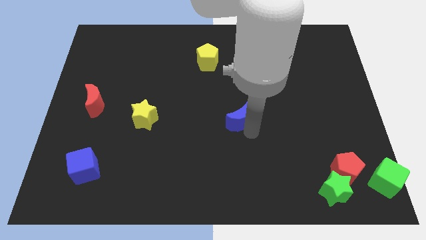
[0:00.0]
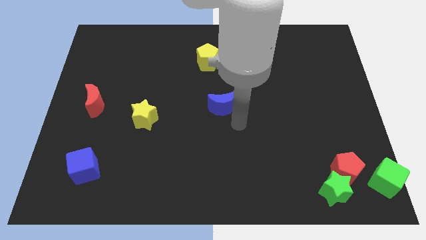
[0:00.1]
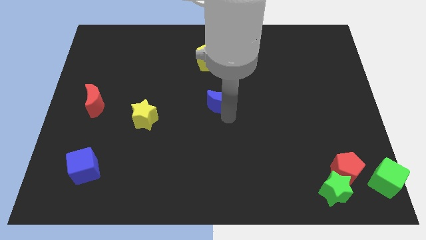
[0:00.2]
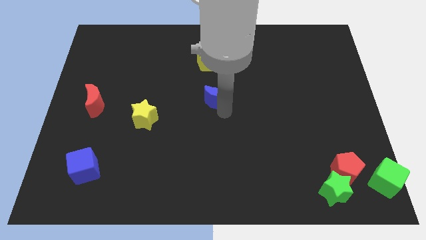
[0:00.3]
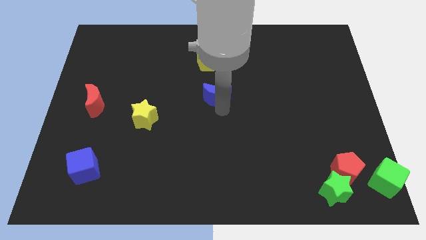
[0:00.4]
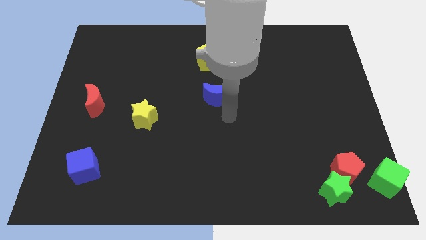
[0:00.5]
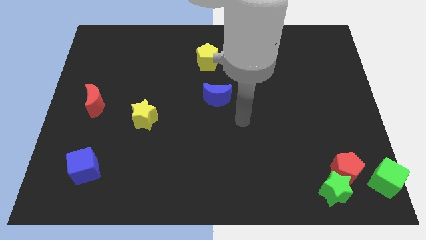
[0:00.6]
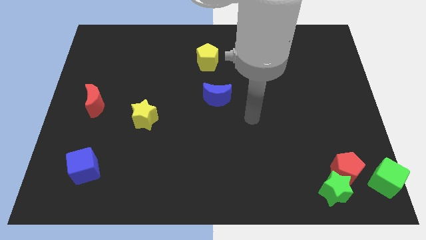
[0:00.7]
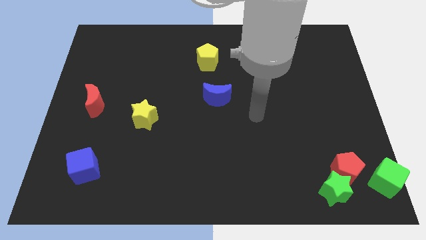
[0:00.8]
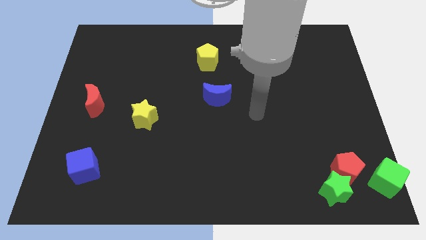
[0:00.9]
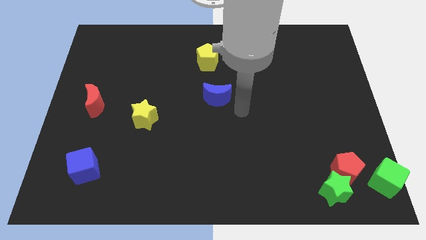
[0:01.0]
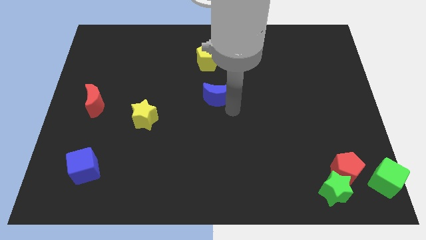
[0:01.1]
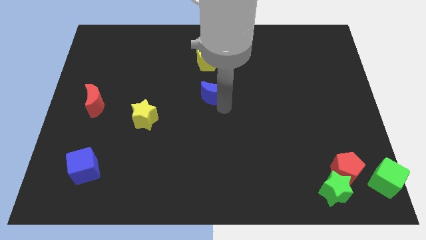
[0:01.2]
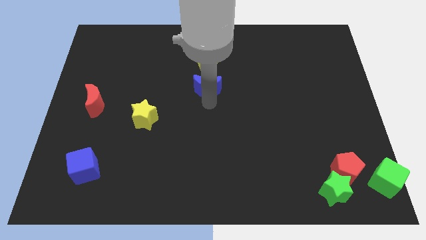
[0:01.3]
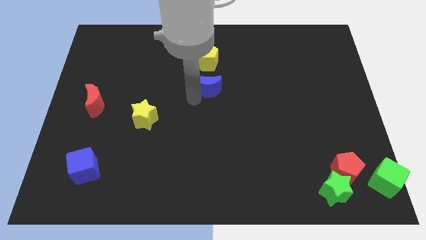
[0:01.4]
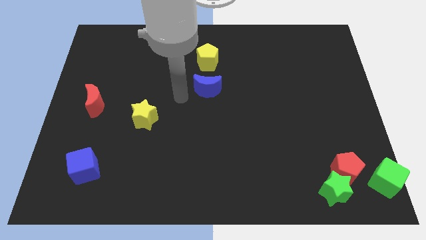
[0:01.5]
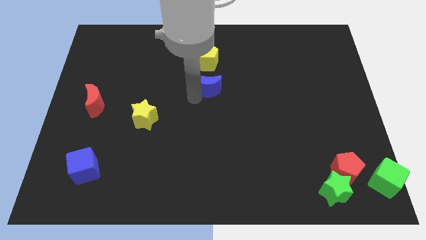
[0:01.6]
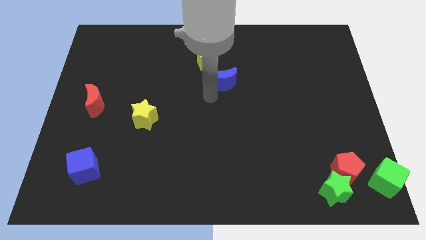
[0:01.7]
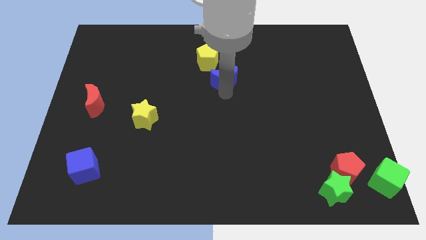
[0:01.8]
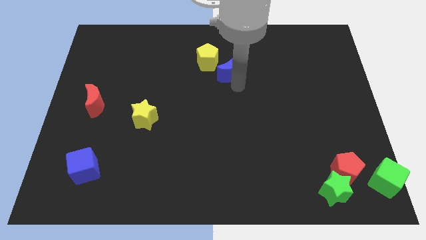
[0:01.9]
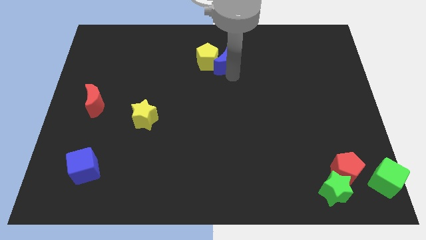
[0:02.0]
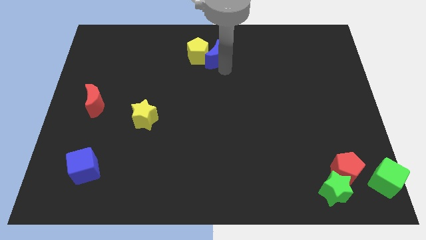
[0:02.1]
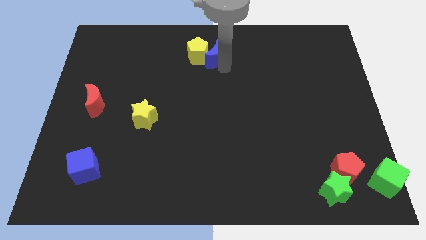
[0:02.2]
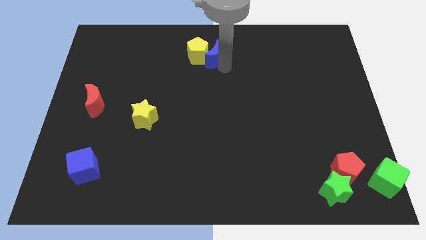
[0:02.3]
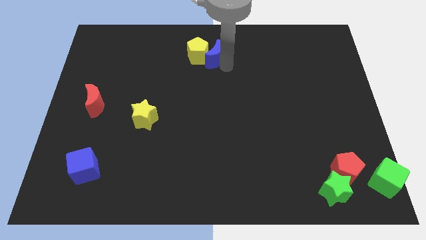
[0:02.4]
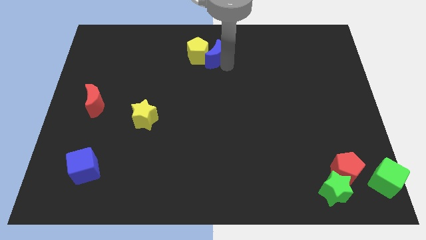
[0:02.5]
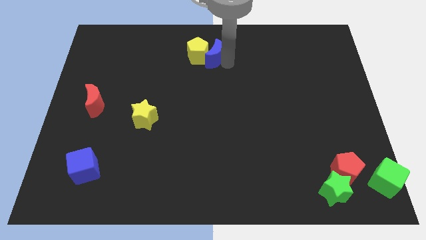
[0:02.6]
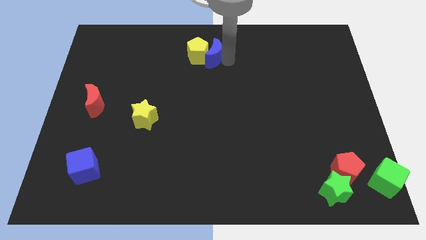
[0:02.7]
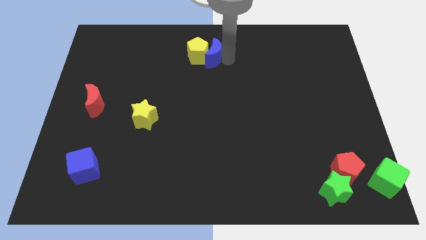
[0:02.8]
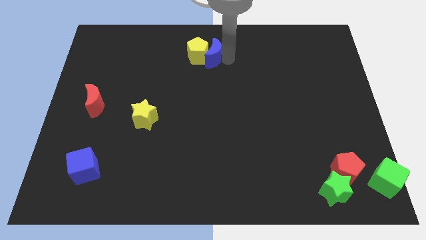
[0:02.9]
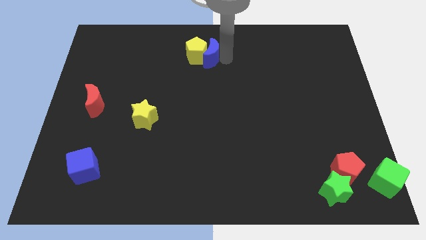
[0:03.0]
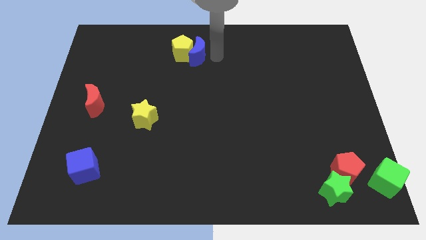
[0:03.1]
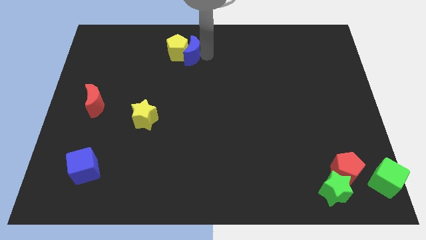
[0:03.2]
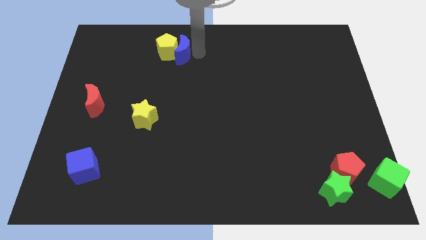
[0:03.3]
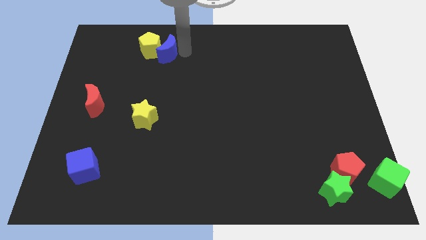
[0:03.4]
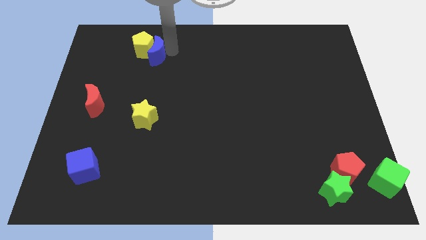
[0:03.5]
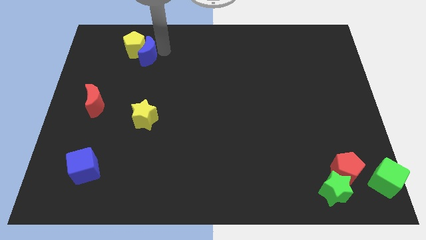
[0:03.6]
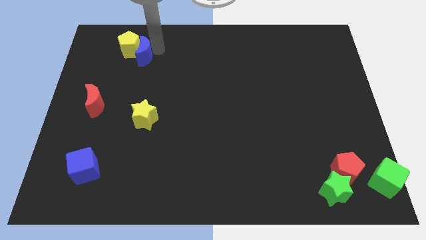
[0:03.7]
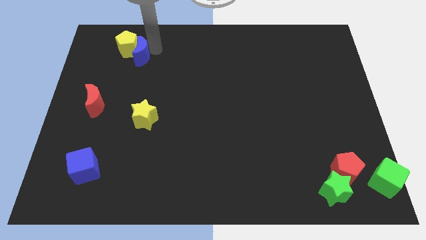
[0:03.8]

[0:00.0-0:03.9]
push the blue moon into the yellow pentagon

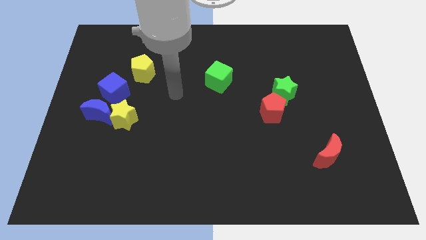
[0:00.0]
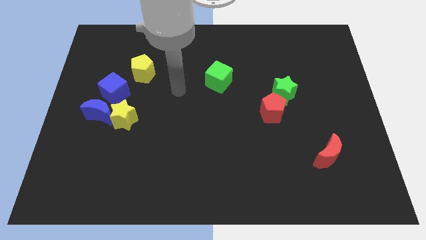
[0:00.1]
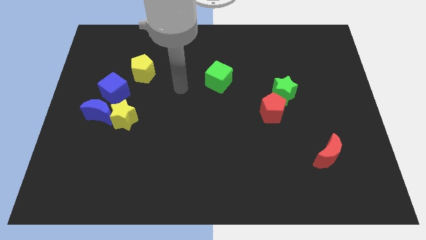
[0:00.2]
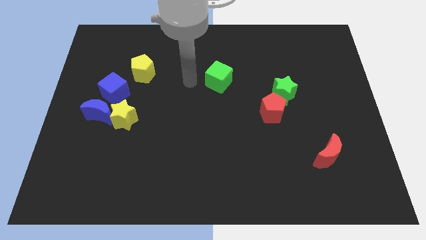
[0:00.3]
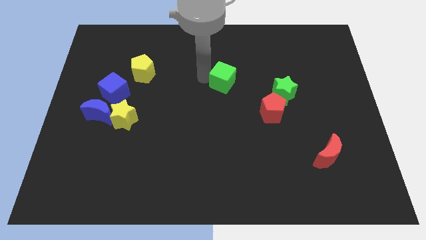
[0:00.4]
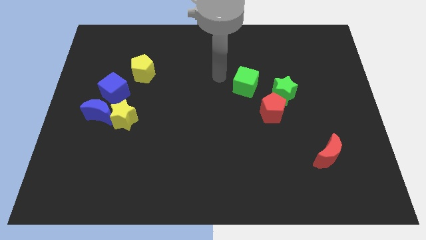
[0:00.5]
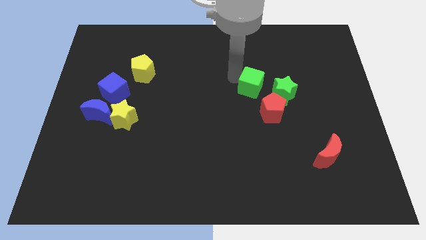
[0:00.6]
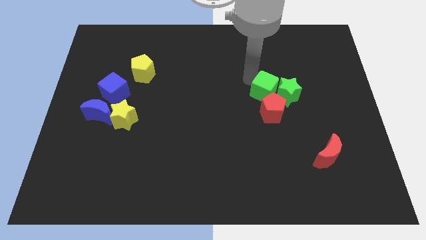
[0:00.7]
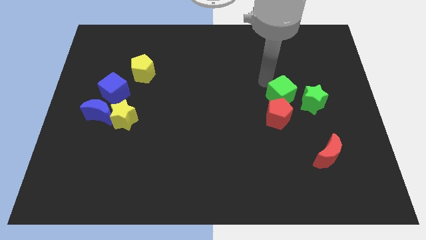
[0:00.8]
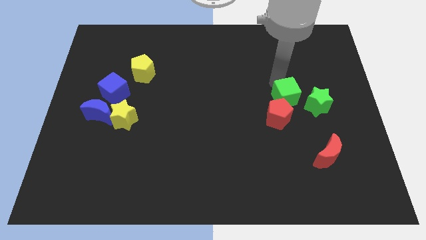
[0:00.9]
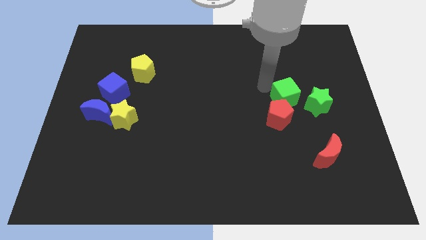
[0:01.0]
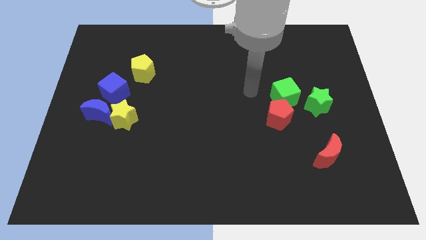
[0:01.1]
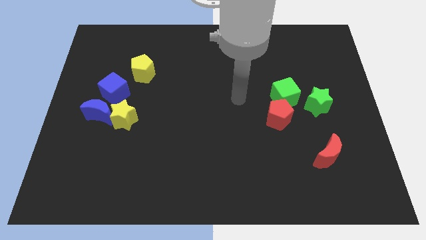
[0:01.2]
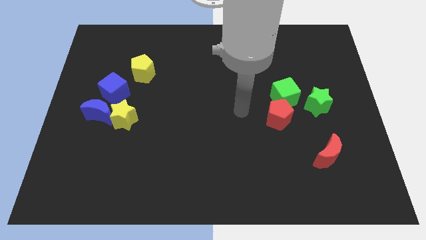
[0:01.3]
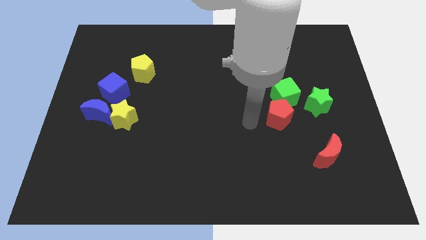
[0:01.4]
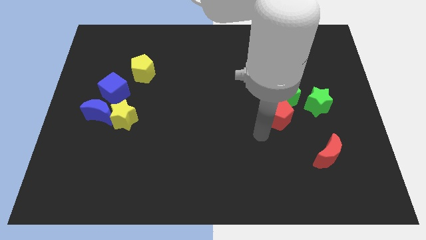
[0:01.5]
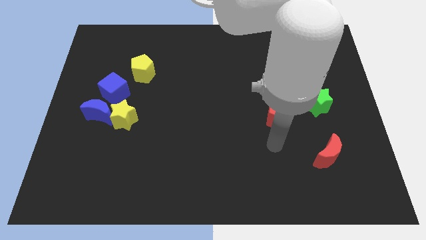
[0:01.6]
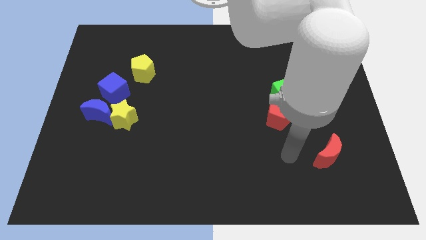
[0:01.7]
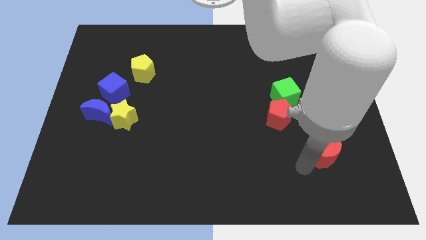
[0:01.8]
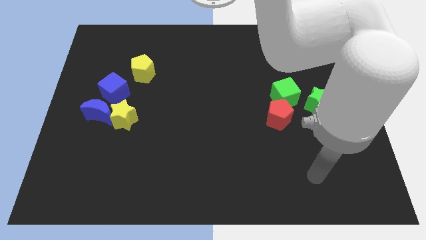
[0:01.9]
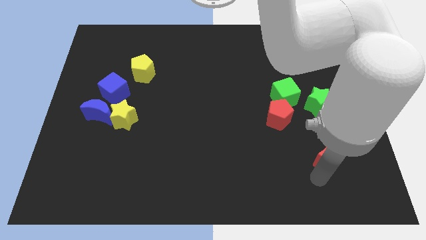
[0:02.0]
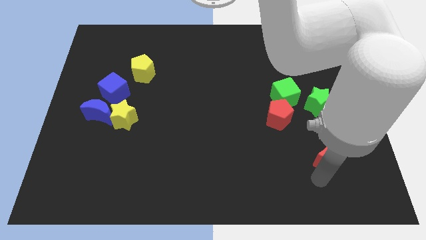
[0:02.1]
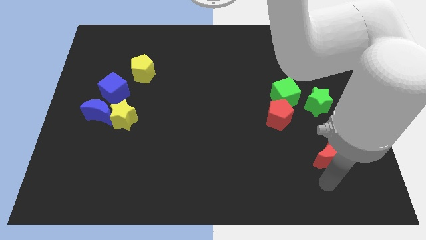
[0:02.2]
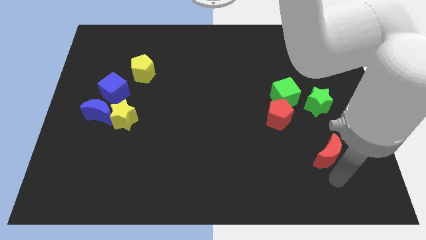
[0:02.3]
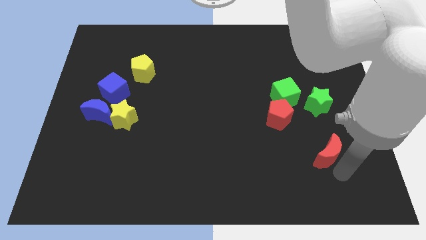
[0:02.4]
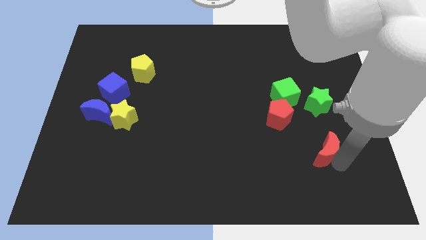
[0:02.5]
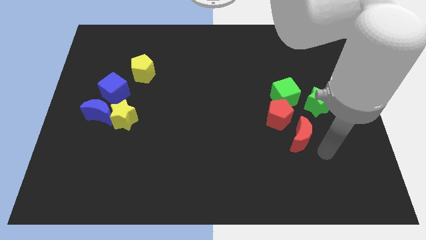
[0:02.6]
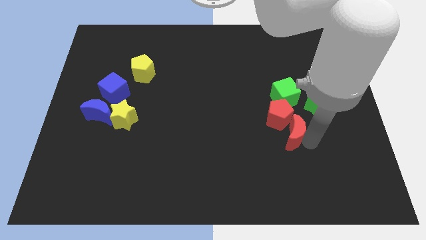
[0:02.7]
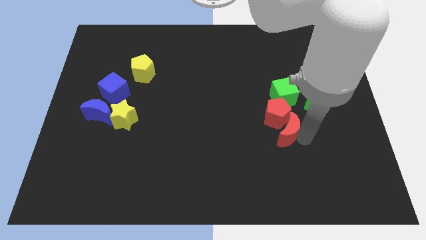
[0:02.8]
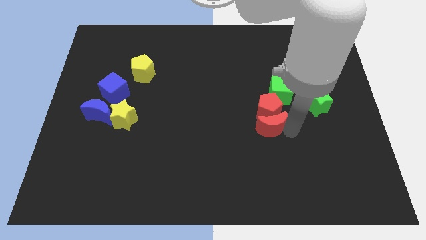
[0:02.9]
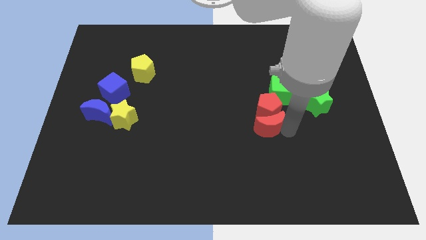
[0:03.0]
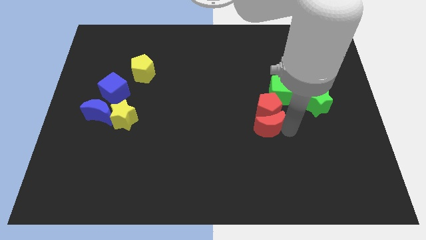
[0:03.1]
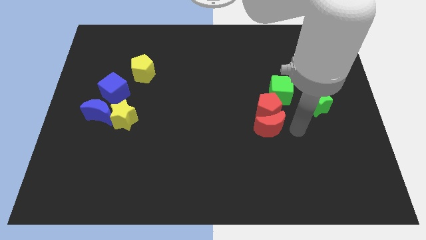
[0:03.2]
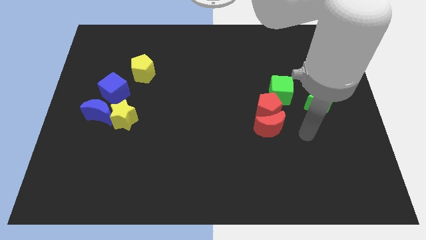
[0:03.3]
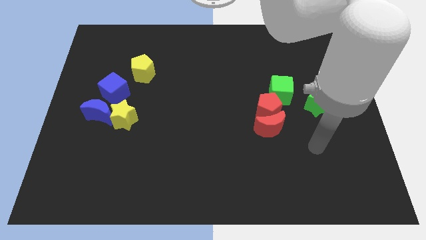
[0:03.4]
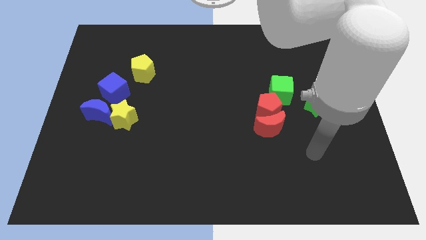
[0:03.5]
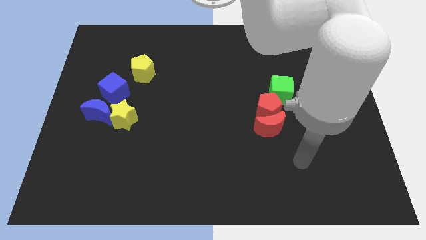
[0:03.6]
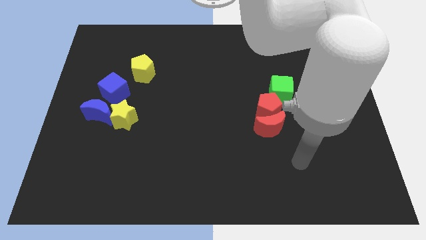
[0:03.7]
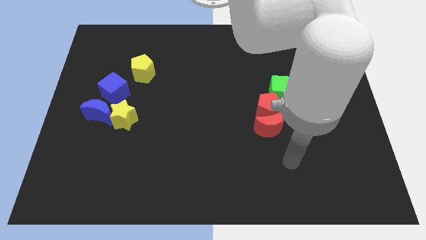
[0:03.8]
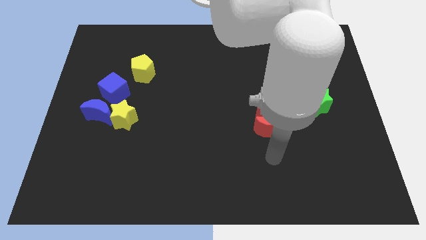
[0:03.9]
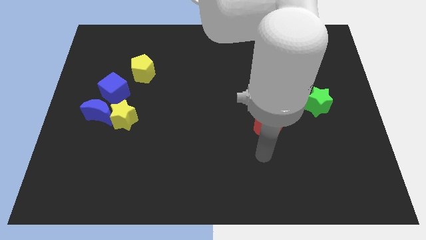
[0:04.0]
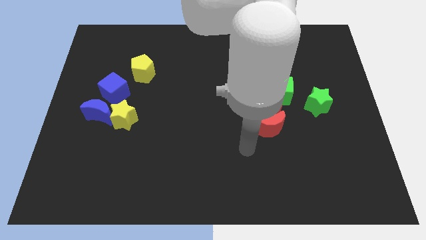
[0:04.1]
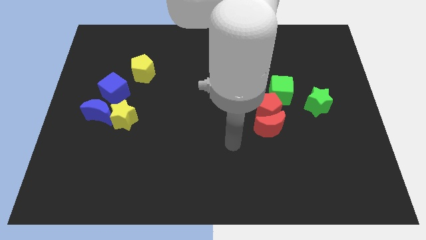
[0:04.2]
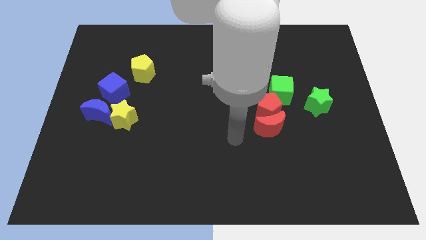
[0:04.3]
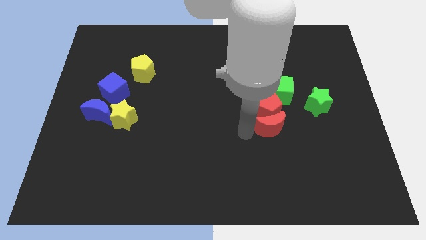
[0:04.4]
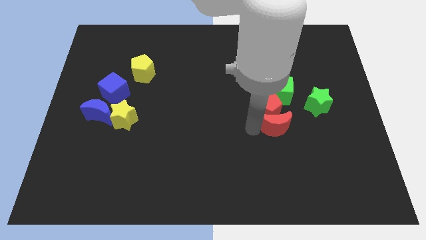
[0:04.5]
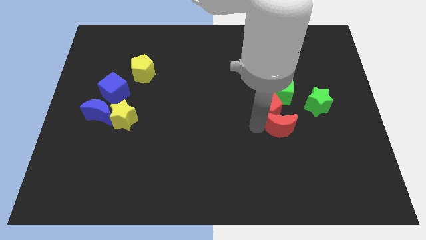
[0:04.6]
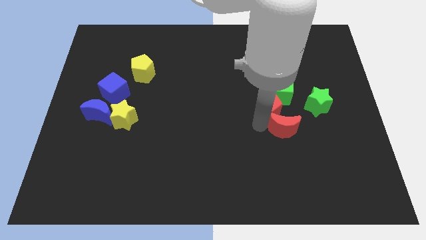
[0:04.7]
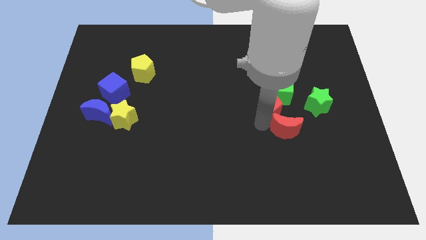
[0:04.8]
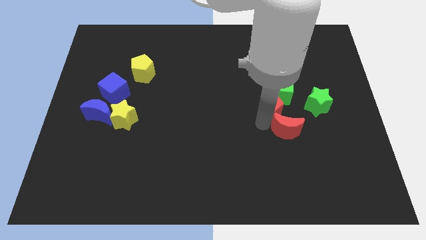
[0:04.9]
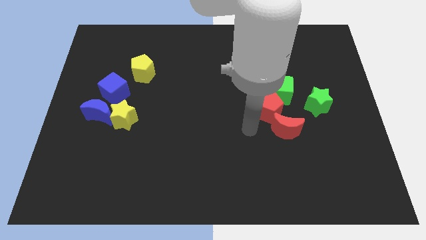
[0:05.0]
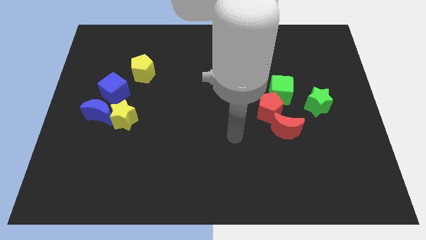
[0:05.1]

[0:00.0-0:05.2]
adjust all green and red blocks towards each other at the center right
